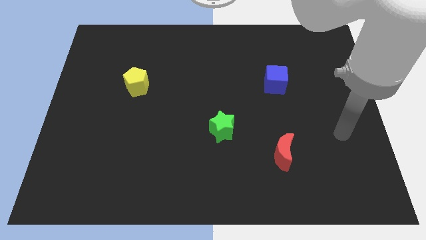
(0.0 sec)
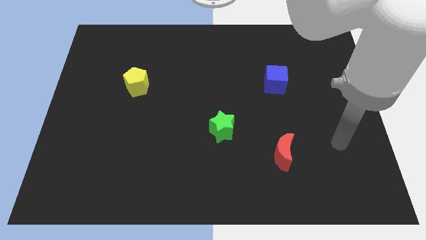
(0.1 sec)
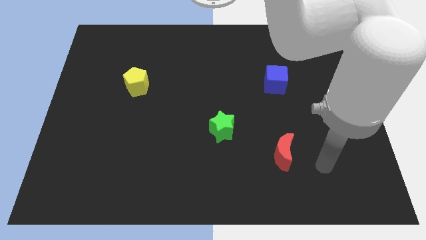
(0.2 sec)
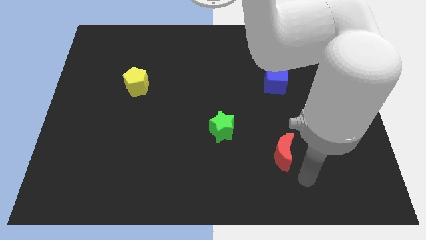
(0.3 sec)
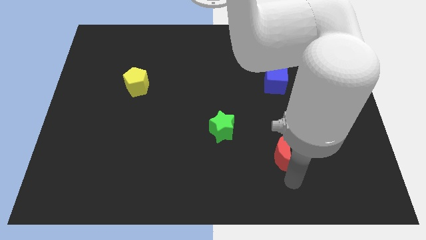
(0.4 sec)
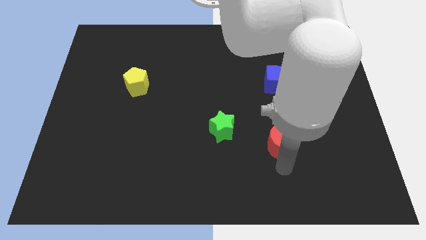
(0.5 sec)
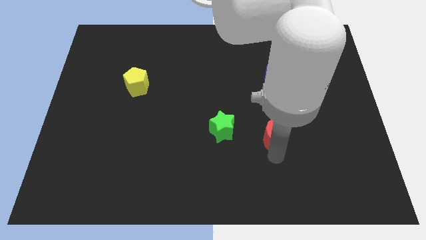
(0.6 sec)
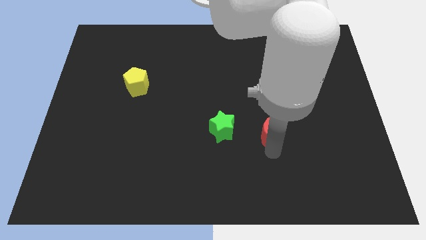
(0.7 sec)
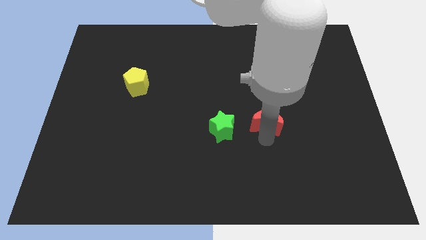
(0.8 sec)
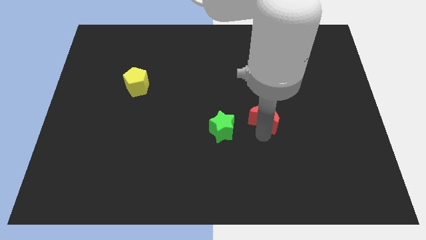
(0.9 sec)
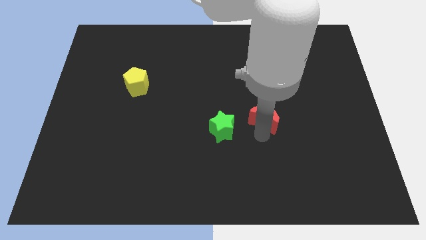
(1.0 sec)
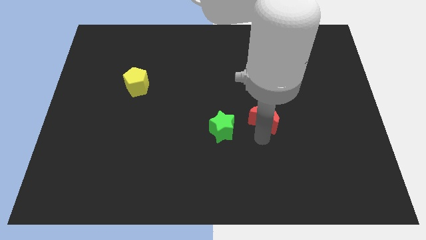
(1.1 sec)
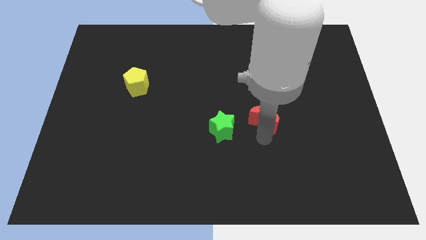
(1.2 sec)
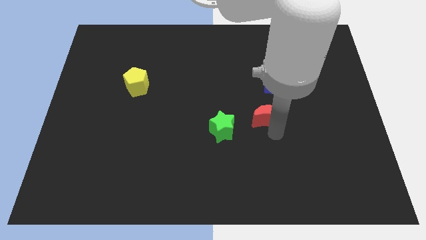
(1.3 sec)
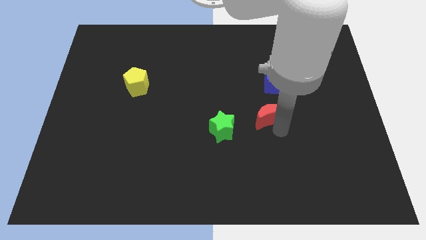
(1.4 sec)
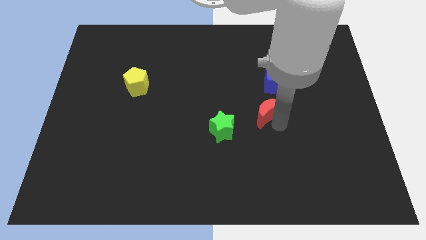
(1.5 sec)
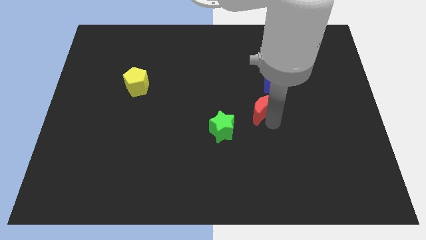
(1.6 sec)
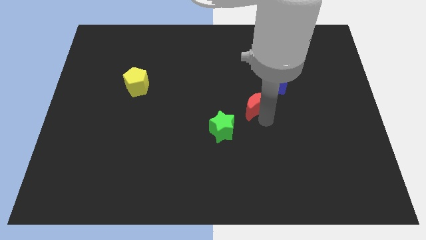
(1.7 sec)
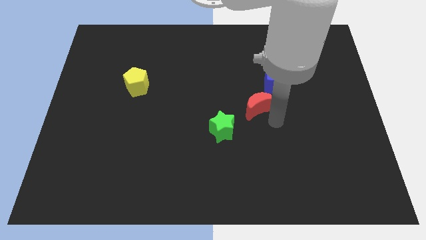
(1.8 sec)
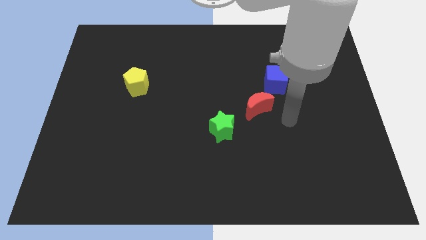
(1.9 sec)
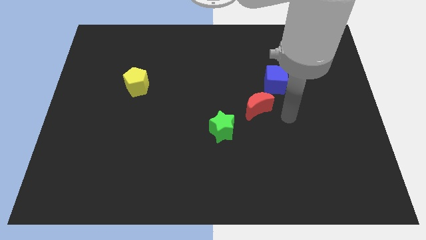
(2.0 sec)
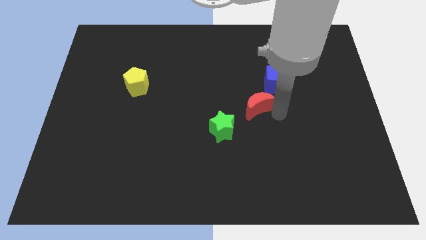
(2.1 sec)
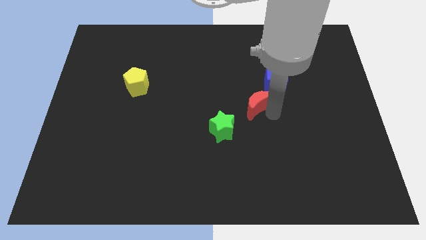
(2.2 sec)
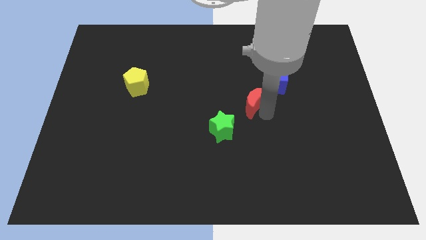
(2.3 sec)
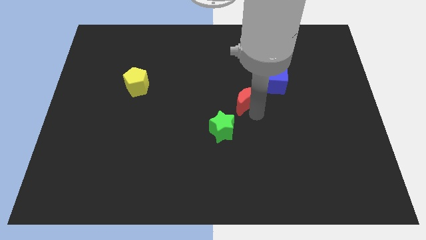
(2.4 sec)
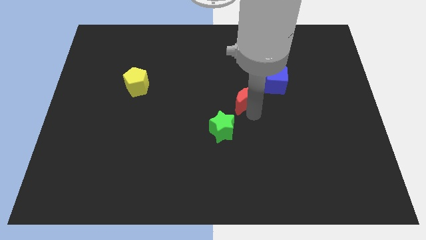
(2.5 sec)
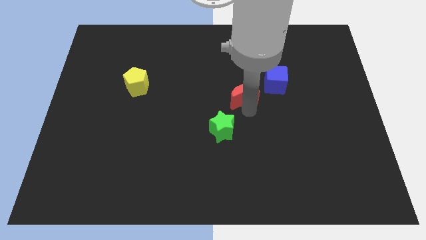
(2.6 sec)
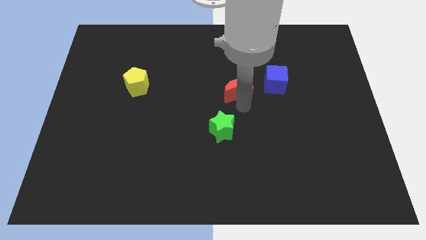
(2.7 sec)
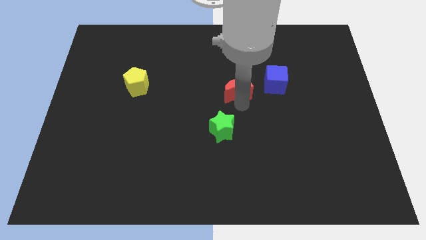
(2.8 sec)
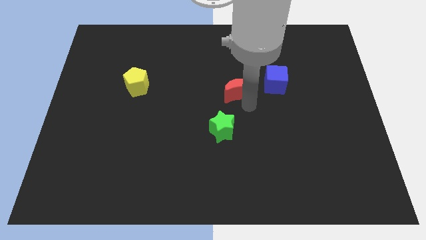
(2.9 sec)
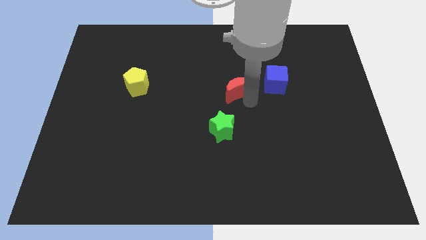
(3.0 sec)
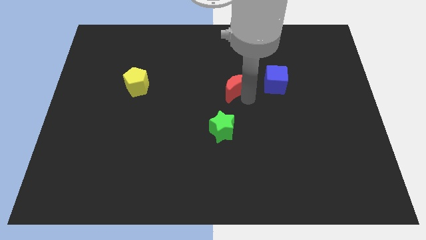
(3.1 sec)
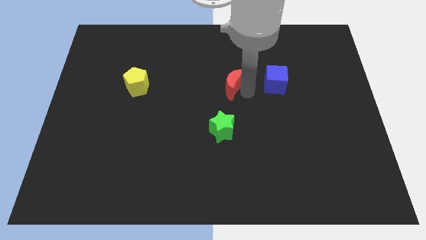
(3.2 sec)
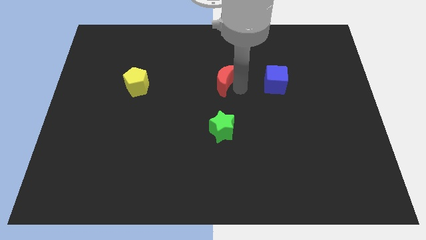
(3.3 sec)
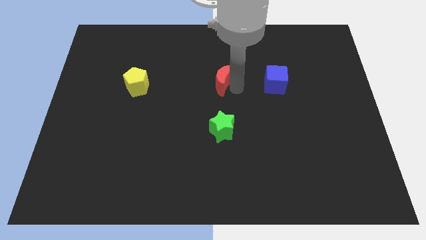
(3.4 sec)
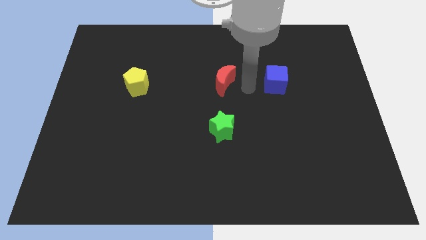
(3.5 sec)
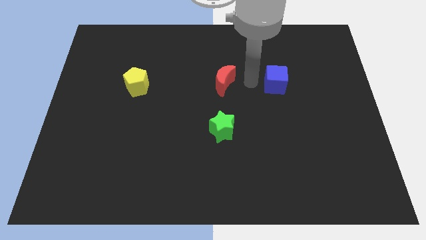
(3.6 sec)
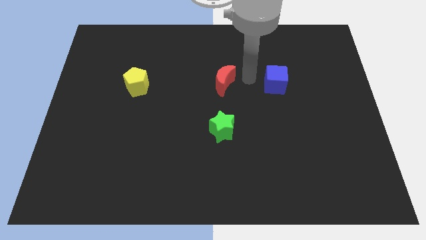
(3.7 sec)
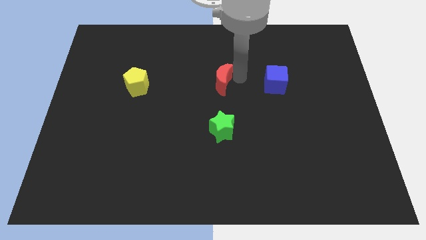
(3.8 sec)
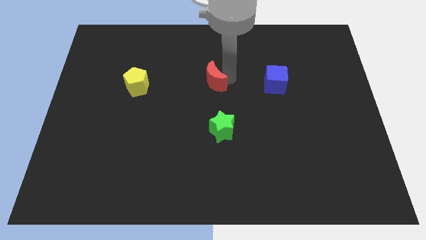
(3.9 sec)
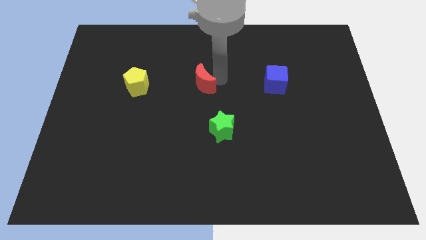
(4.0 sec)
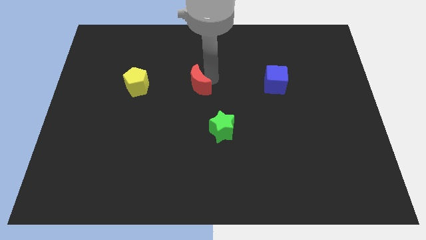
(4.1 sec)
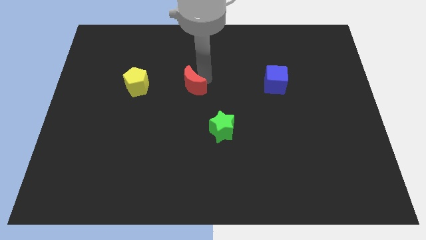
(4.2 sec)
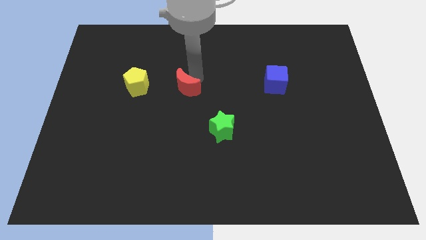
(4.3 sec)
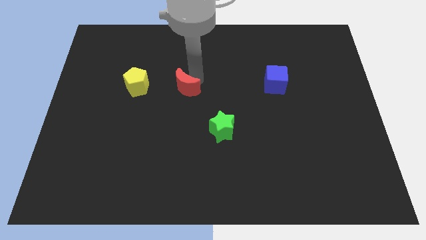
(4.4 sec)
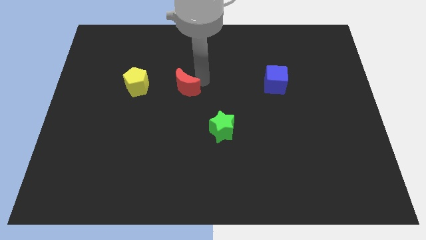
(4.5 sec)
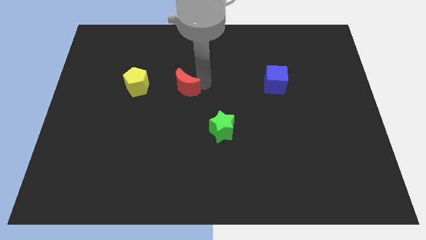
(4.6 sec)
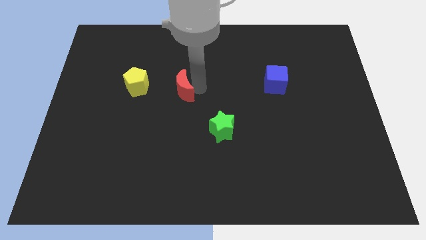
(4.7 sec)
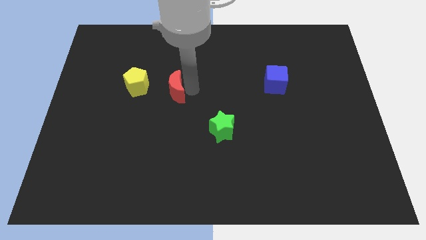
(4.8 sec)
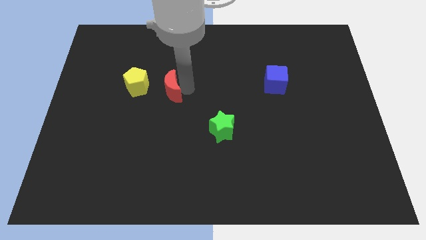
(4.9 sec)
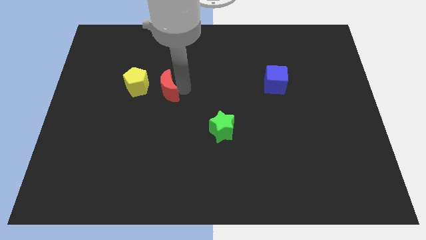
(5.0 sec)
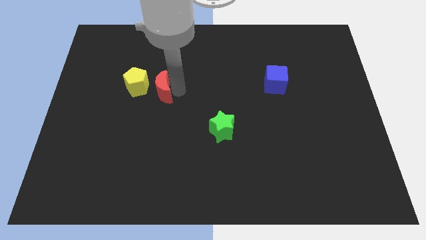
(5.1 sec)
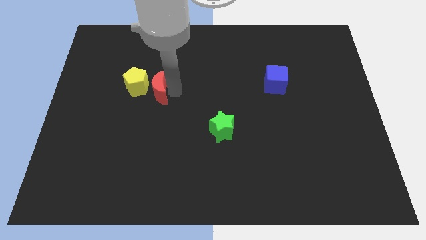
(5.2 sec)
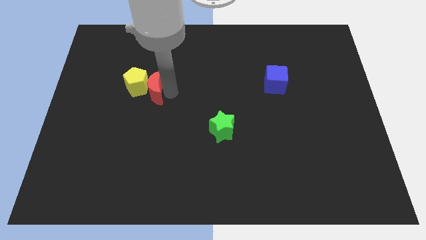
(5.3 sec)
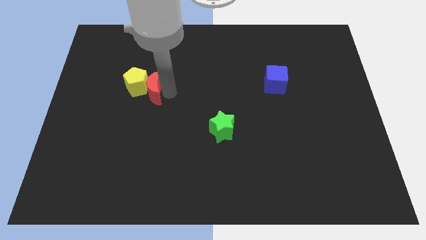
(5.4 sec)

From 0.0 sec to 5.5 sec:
push the red moon close to the pentagon

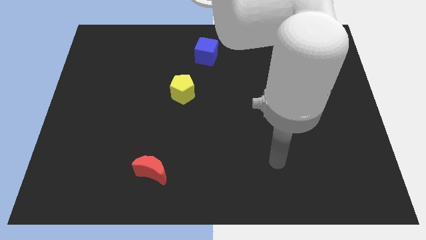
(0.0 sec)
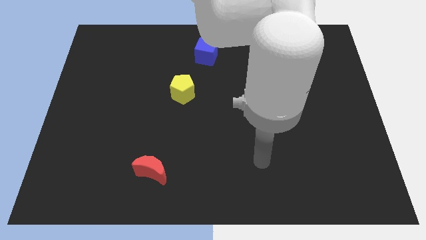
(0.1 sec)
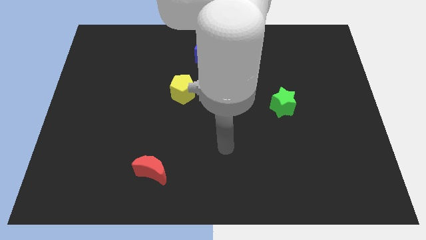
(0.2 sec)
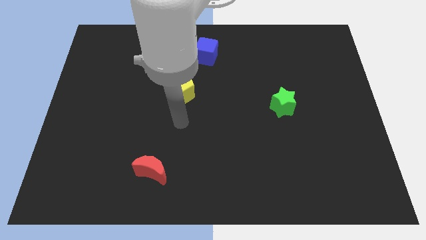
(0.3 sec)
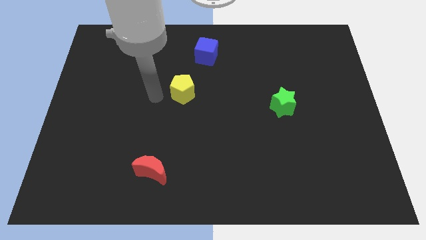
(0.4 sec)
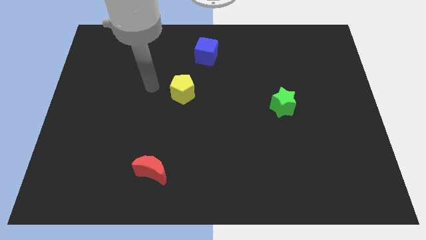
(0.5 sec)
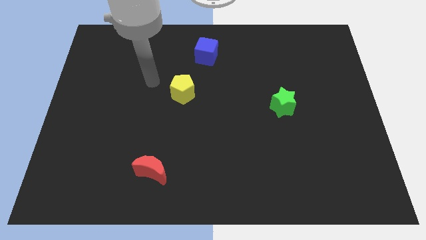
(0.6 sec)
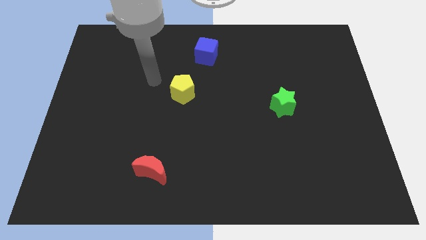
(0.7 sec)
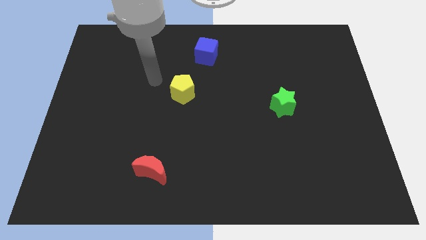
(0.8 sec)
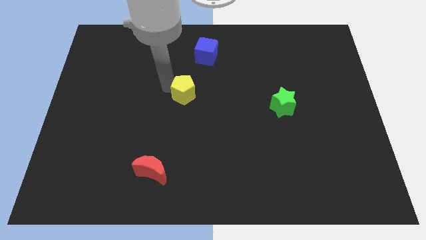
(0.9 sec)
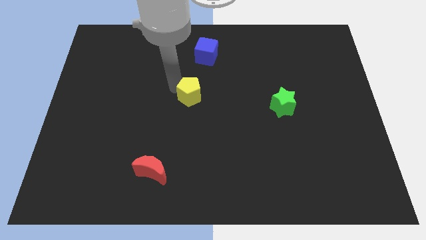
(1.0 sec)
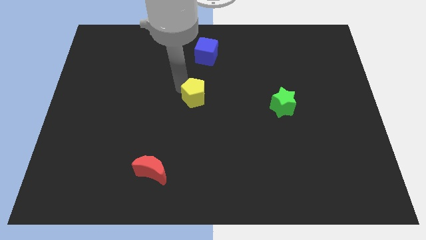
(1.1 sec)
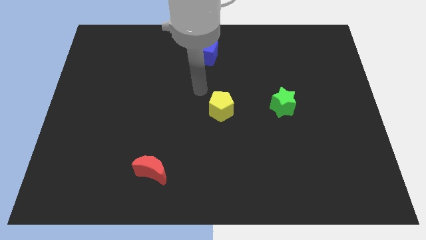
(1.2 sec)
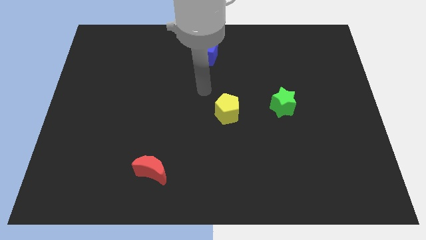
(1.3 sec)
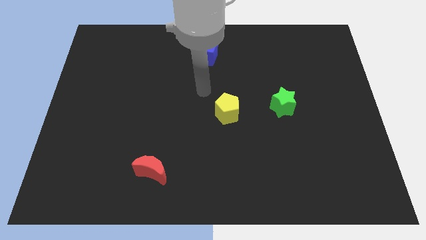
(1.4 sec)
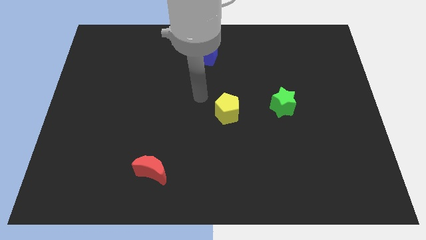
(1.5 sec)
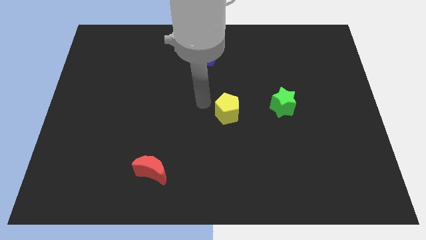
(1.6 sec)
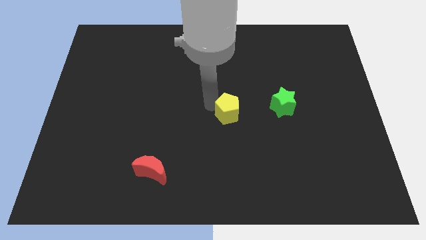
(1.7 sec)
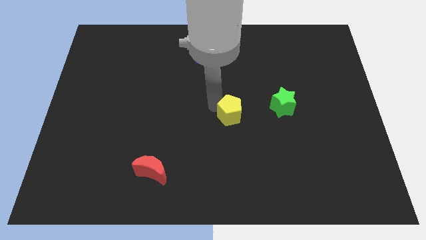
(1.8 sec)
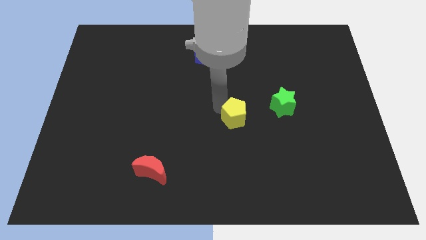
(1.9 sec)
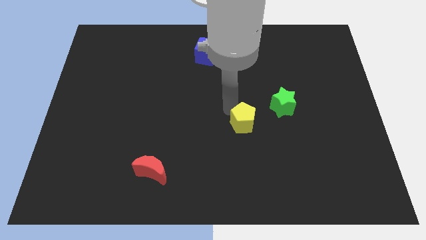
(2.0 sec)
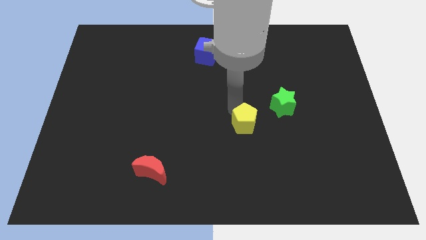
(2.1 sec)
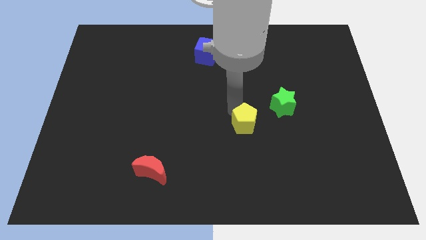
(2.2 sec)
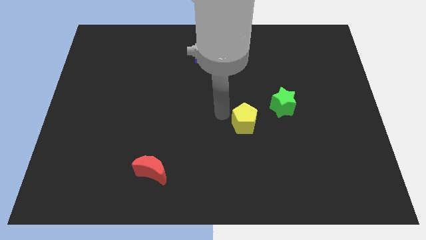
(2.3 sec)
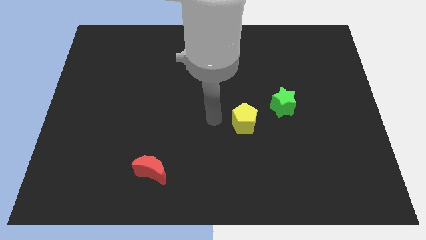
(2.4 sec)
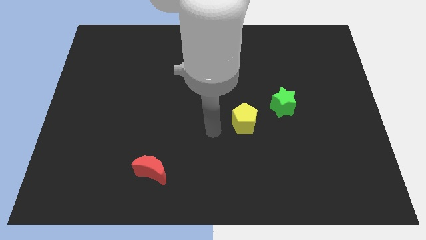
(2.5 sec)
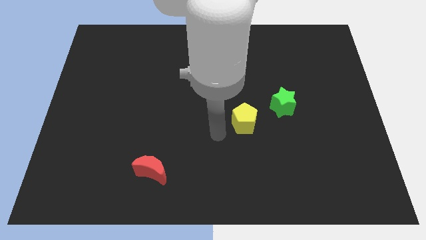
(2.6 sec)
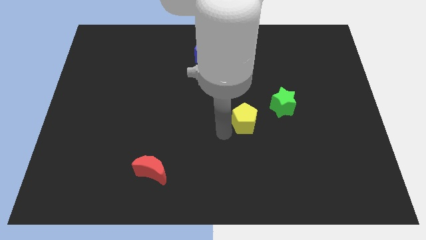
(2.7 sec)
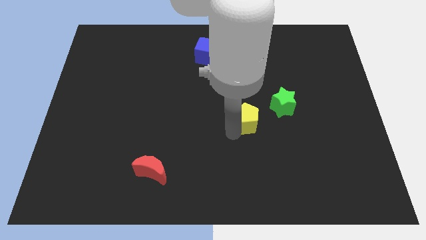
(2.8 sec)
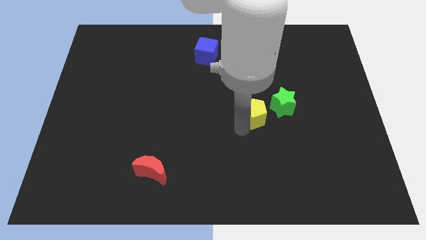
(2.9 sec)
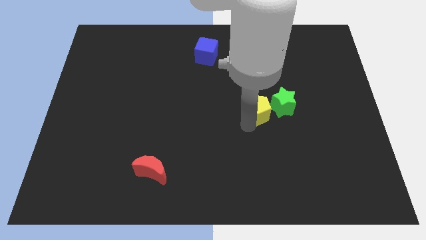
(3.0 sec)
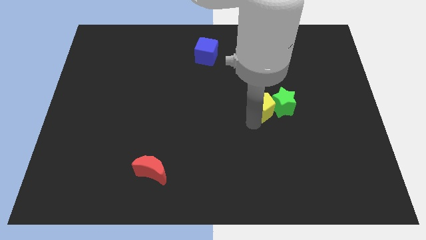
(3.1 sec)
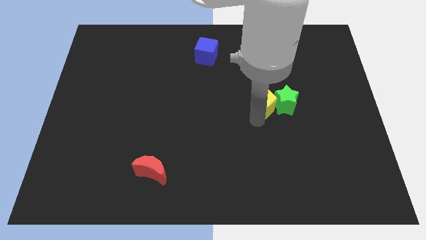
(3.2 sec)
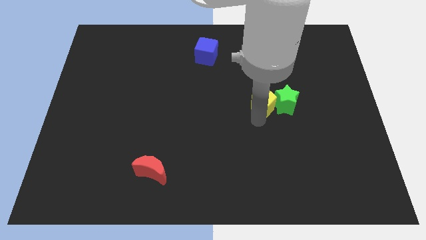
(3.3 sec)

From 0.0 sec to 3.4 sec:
push the pentagon close to the green block
